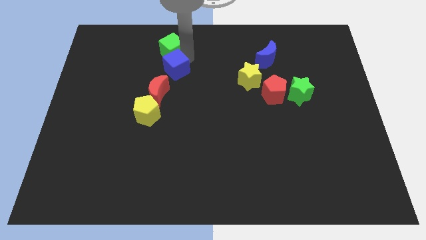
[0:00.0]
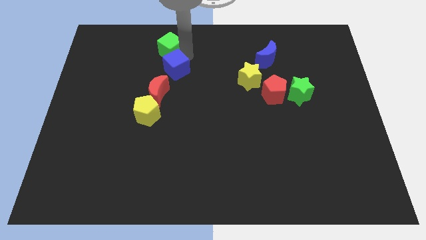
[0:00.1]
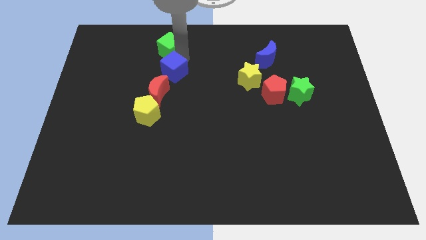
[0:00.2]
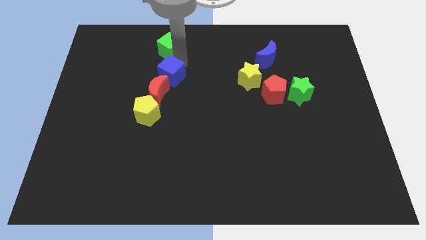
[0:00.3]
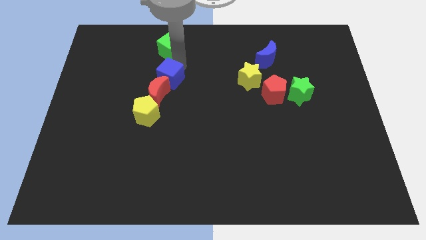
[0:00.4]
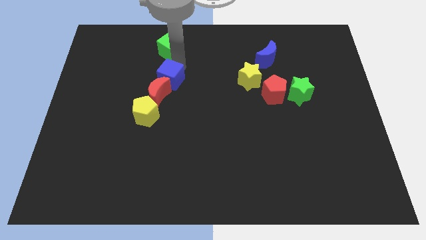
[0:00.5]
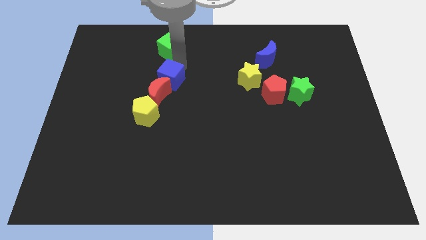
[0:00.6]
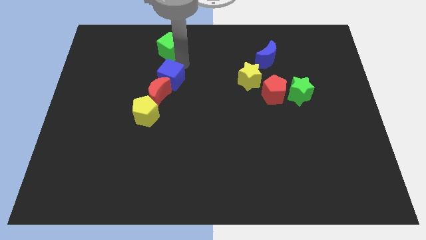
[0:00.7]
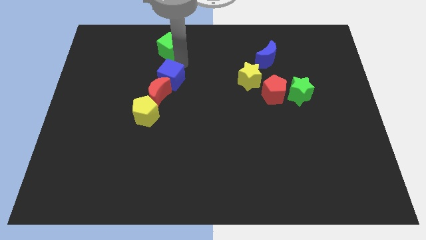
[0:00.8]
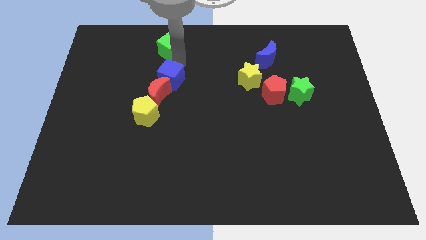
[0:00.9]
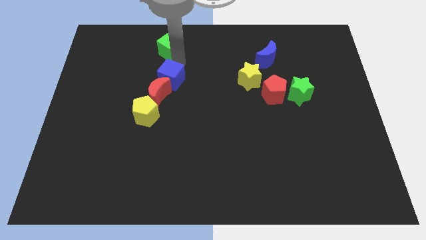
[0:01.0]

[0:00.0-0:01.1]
place the blue cube on top of the red crescent to form a diagonal line

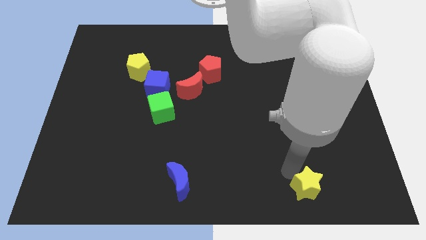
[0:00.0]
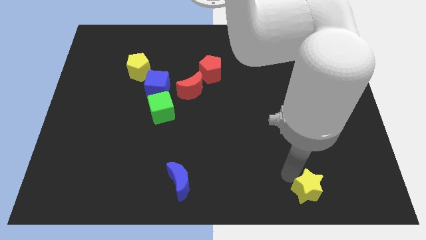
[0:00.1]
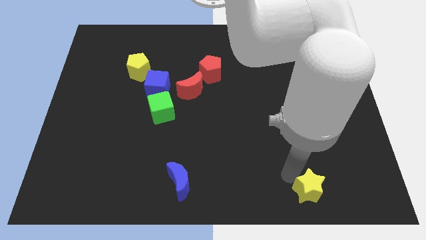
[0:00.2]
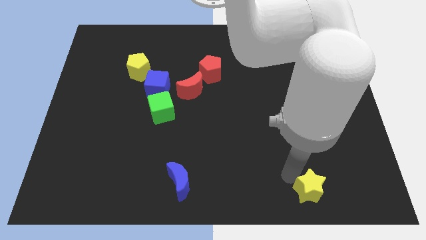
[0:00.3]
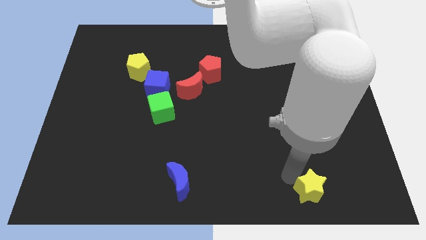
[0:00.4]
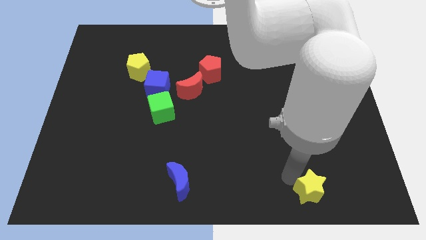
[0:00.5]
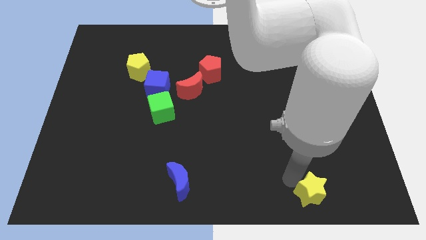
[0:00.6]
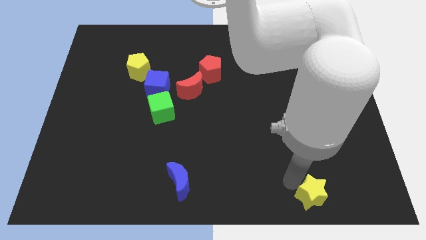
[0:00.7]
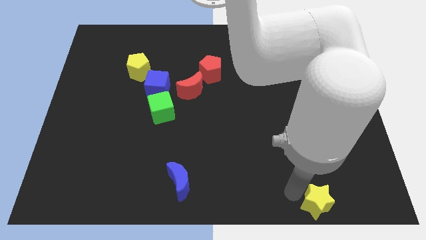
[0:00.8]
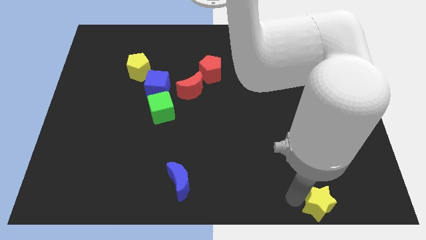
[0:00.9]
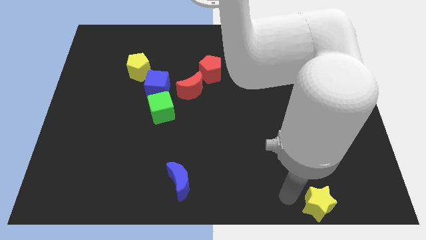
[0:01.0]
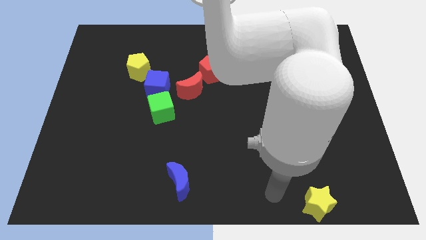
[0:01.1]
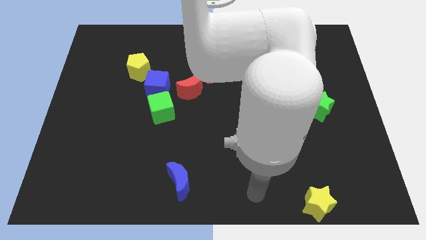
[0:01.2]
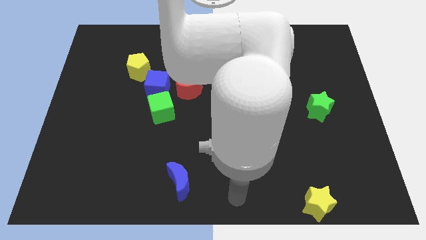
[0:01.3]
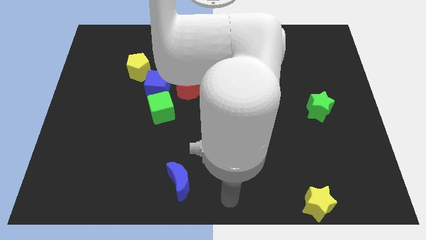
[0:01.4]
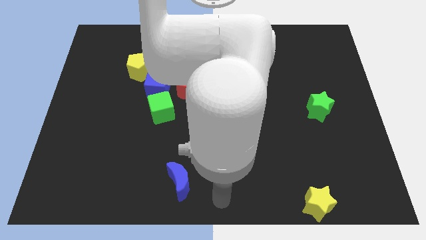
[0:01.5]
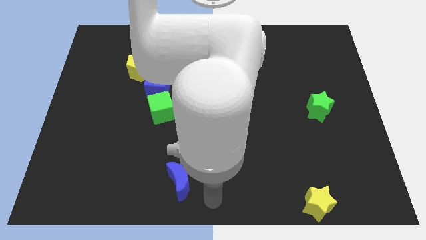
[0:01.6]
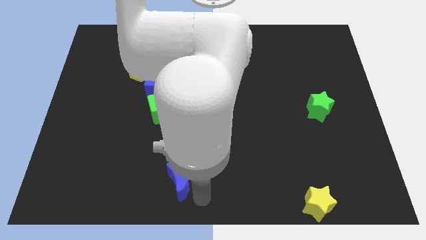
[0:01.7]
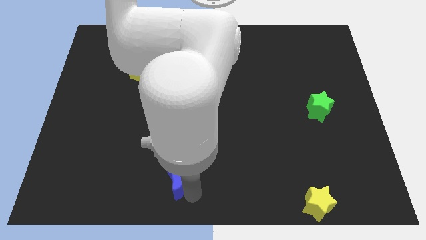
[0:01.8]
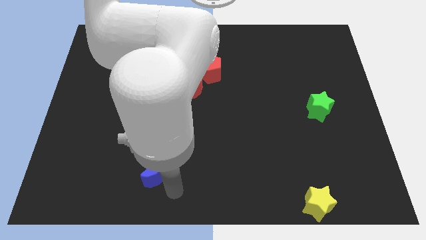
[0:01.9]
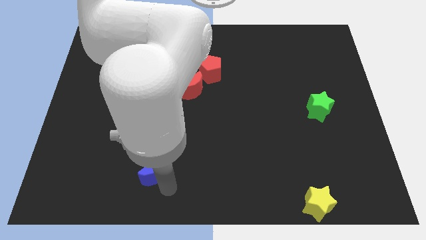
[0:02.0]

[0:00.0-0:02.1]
slightly push yellow star downwards towards bottom right

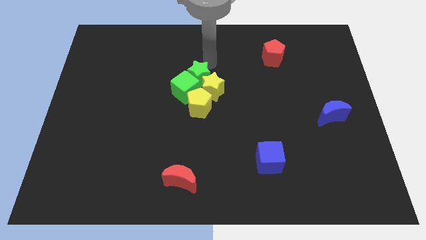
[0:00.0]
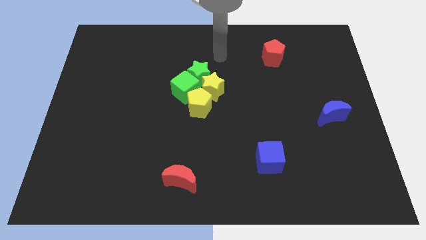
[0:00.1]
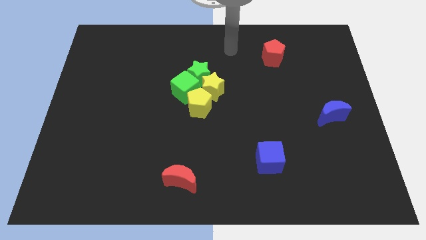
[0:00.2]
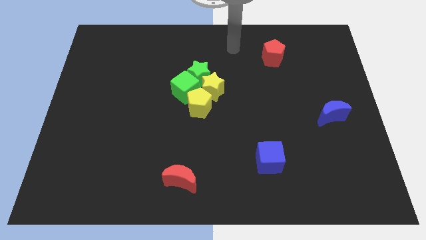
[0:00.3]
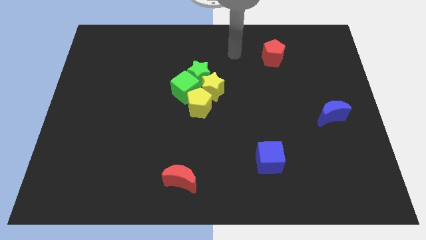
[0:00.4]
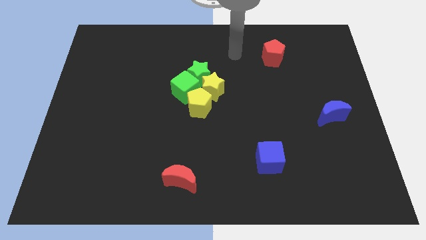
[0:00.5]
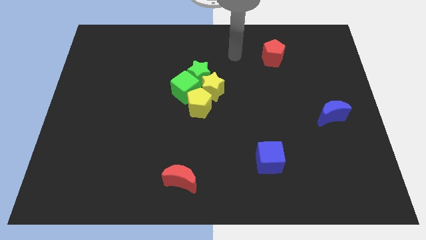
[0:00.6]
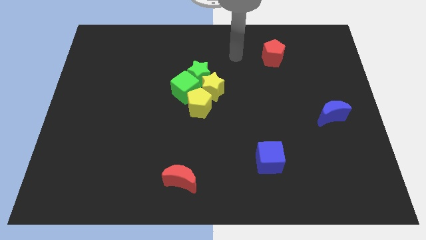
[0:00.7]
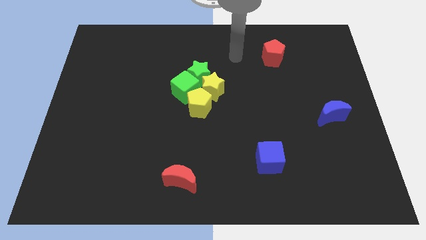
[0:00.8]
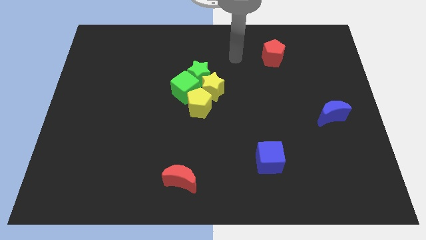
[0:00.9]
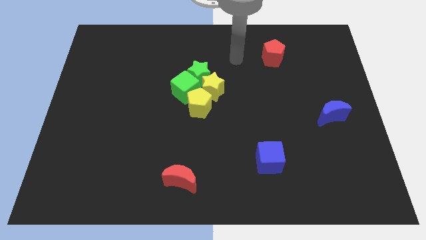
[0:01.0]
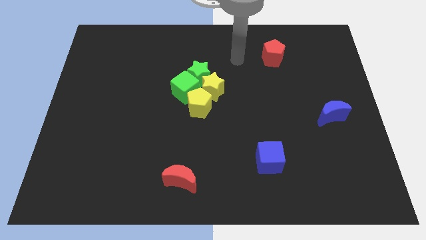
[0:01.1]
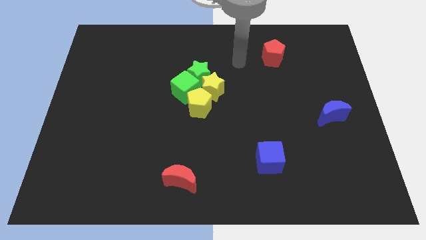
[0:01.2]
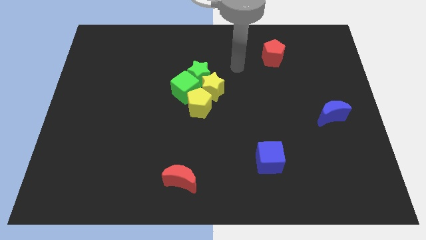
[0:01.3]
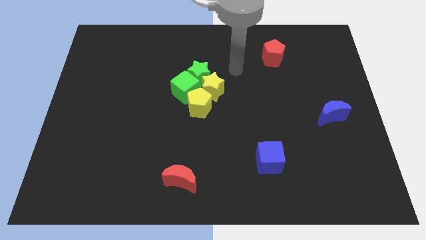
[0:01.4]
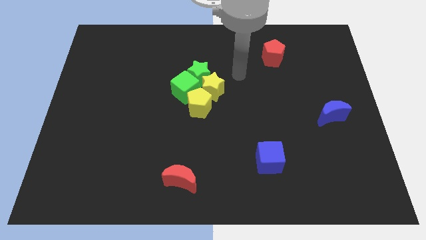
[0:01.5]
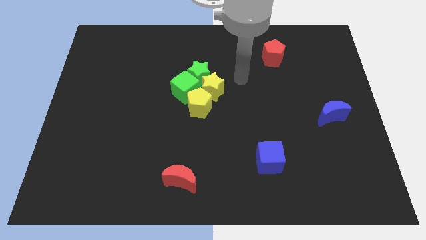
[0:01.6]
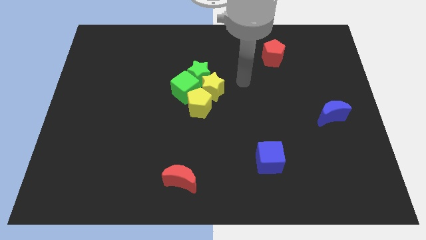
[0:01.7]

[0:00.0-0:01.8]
move your hand towards the bottom

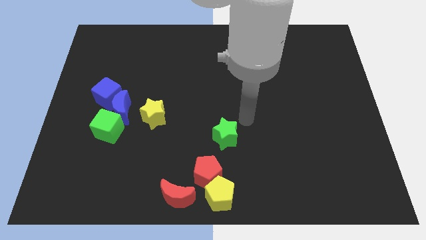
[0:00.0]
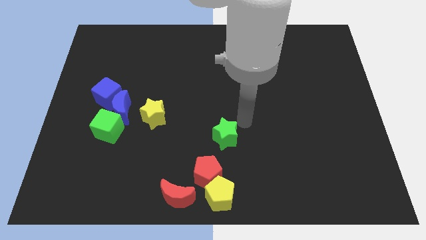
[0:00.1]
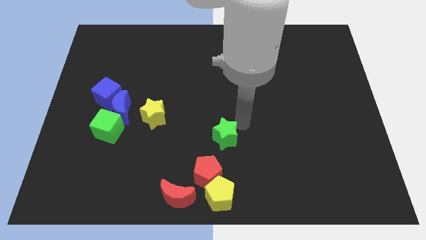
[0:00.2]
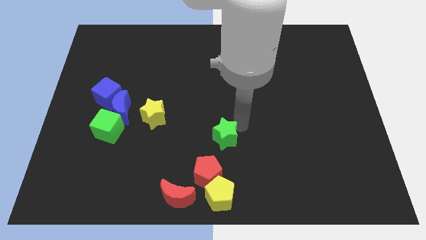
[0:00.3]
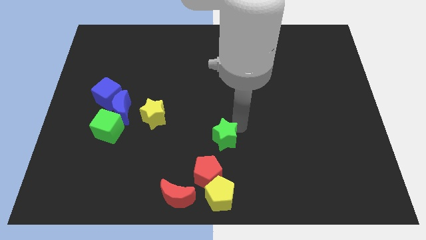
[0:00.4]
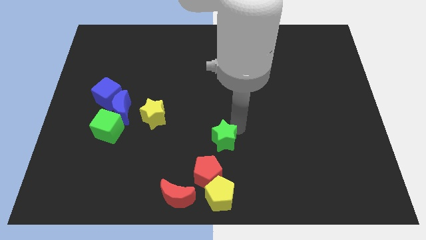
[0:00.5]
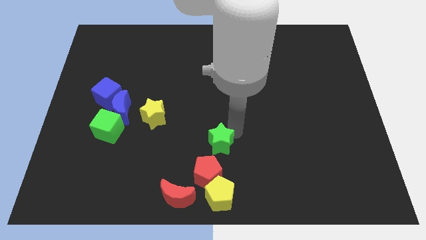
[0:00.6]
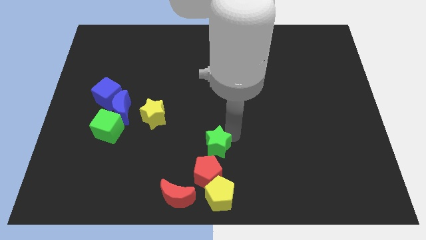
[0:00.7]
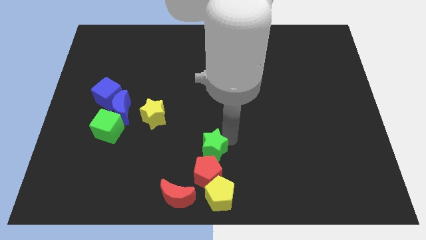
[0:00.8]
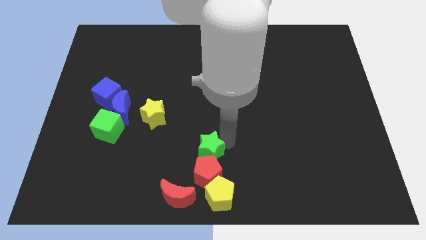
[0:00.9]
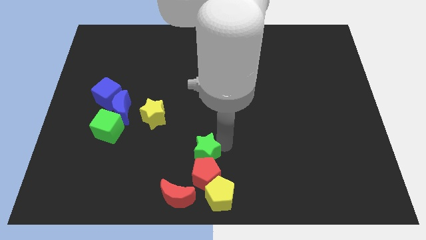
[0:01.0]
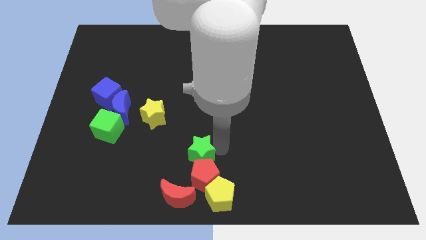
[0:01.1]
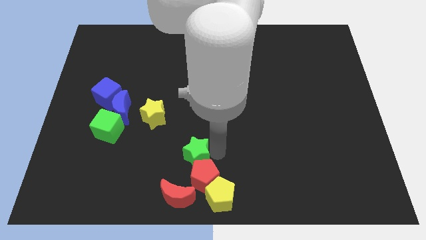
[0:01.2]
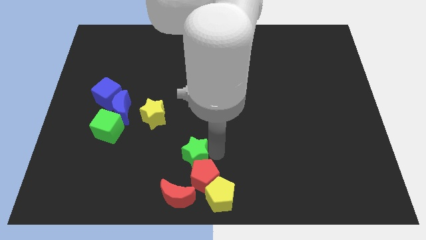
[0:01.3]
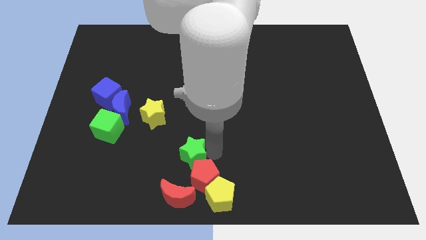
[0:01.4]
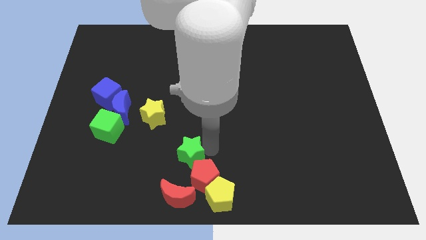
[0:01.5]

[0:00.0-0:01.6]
move the green star to the bottom of the board

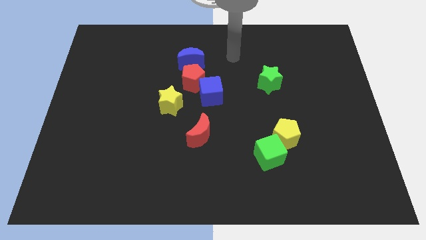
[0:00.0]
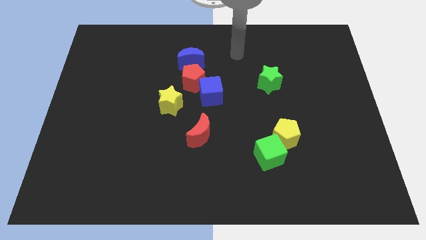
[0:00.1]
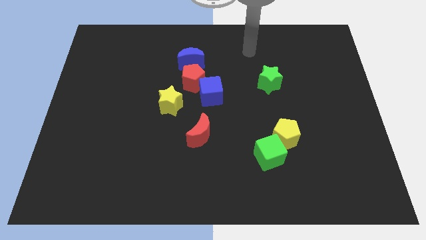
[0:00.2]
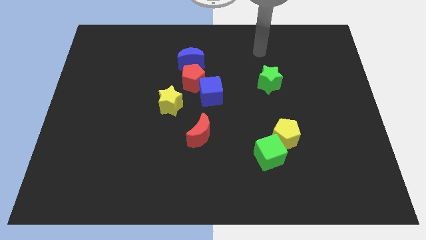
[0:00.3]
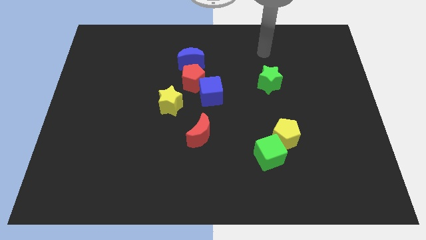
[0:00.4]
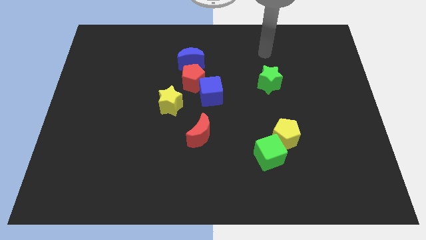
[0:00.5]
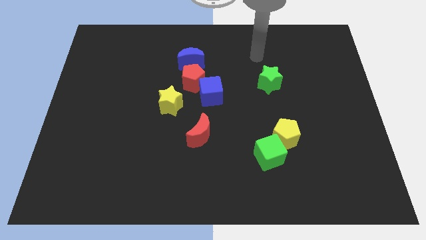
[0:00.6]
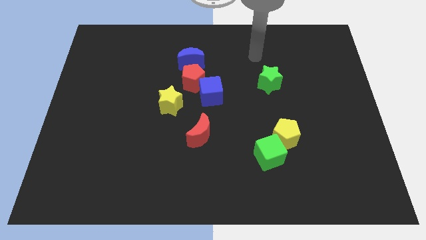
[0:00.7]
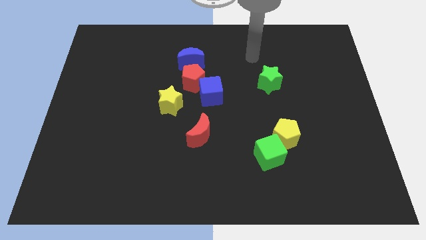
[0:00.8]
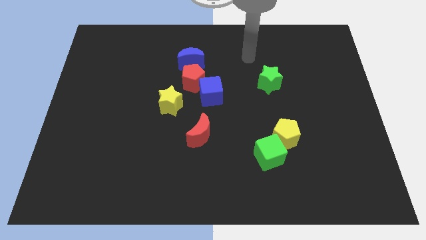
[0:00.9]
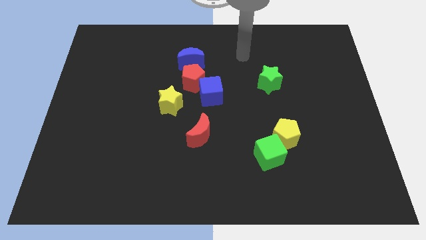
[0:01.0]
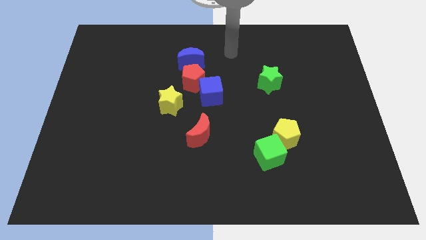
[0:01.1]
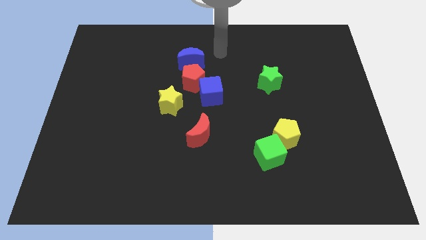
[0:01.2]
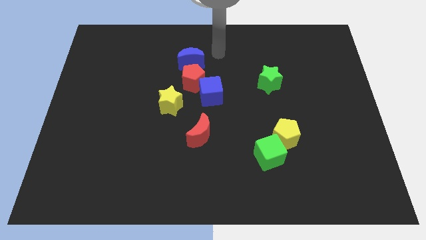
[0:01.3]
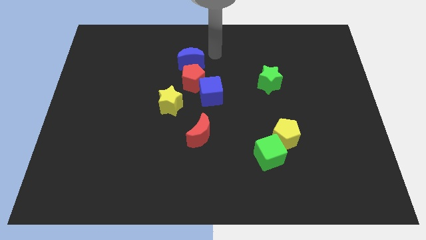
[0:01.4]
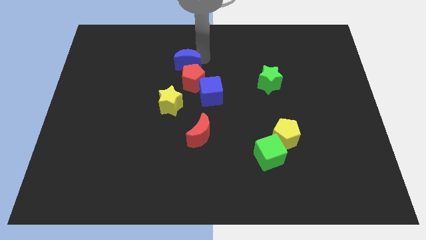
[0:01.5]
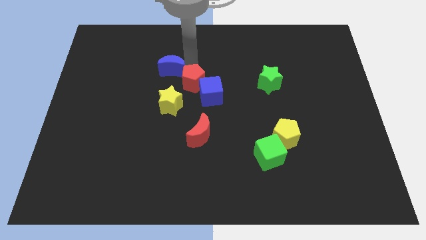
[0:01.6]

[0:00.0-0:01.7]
move your arm towards the blue moon

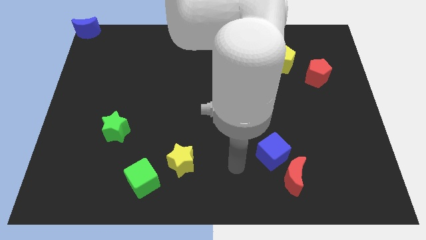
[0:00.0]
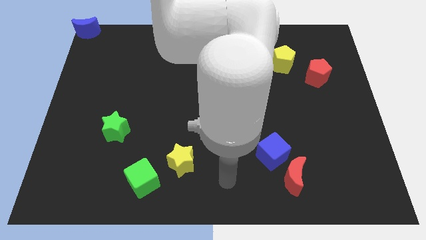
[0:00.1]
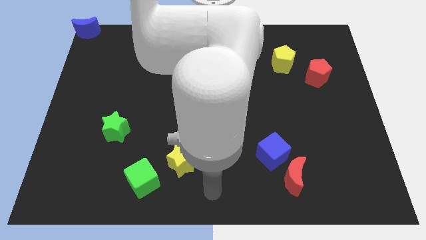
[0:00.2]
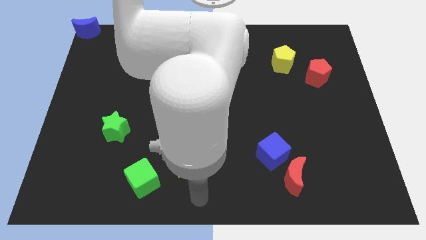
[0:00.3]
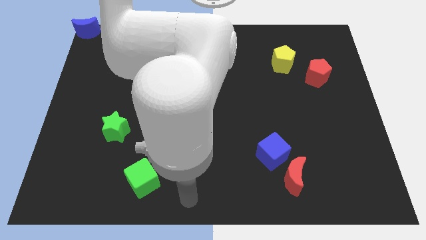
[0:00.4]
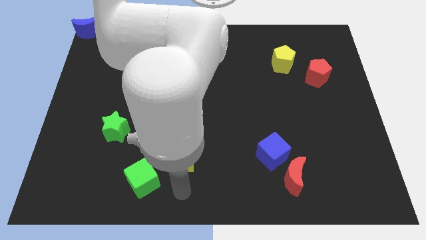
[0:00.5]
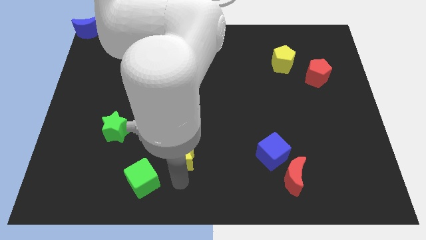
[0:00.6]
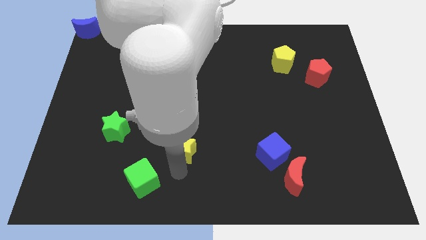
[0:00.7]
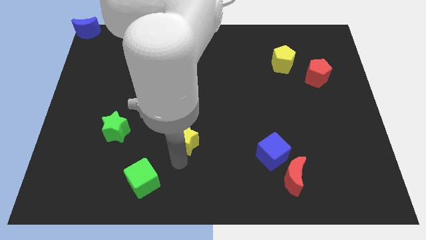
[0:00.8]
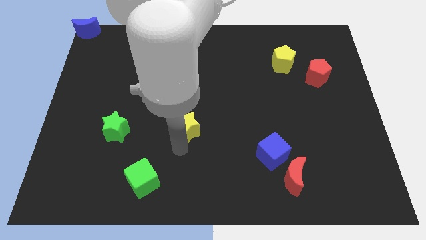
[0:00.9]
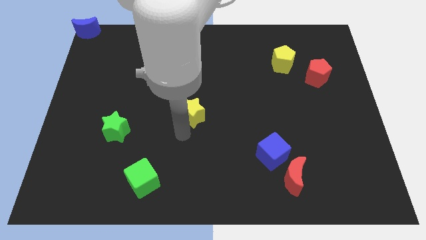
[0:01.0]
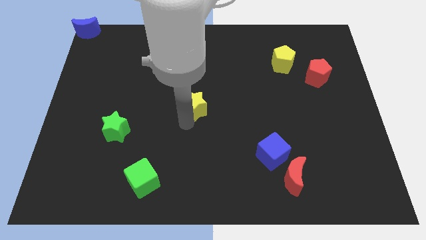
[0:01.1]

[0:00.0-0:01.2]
push the yellow star towards the center of the board
